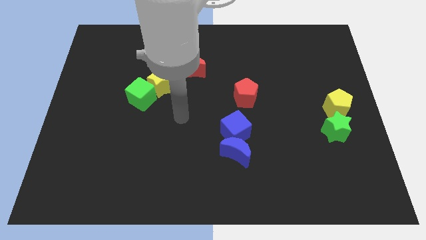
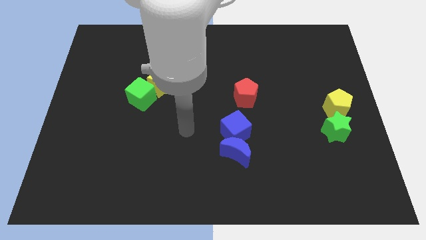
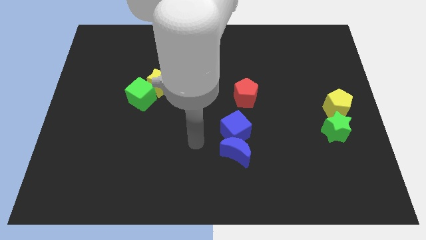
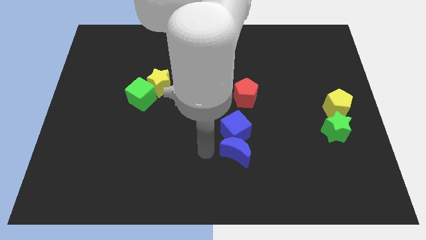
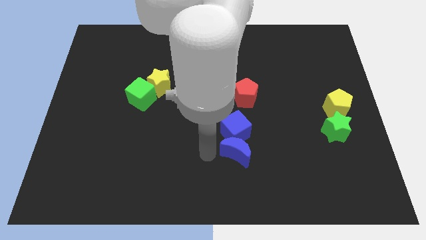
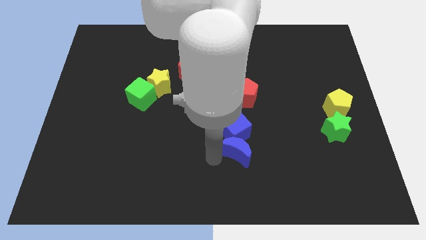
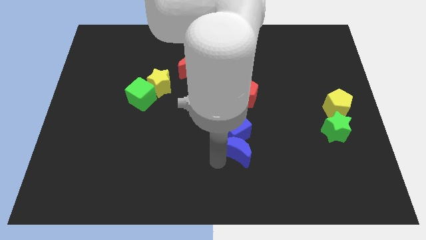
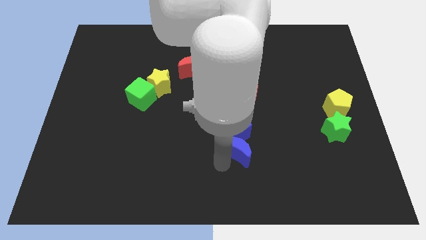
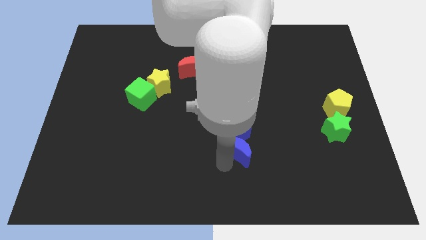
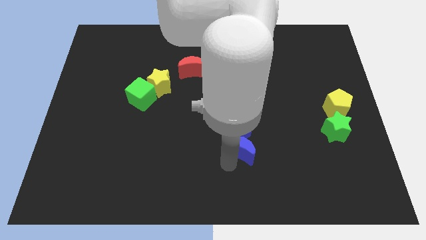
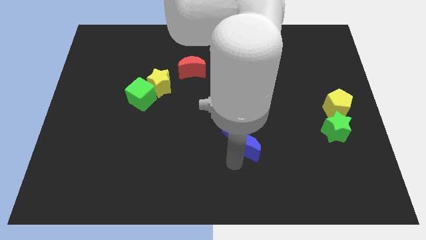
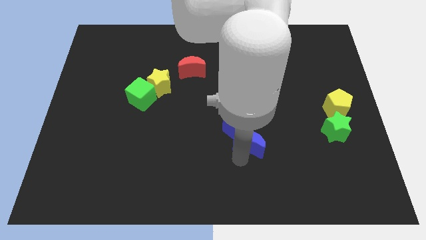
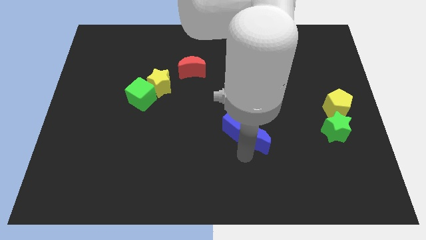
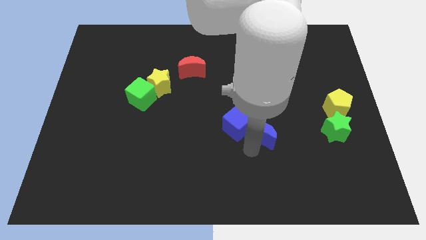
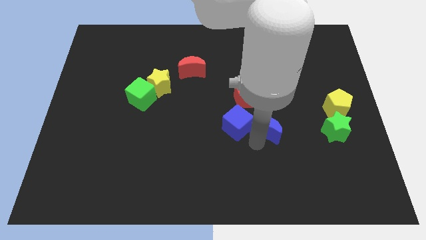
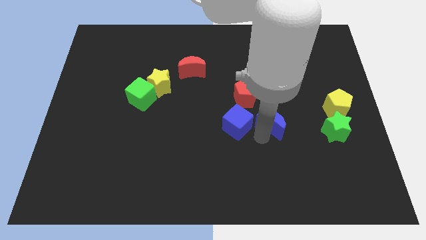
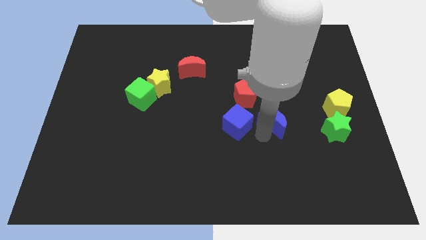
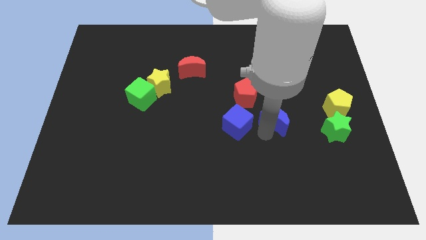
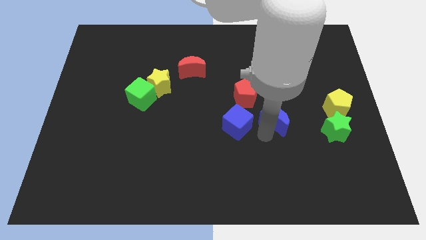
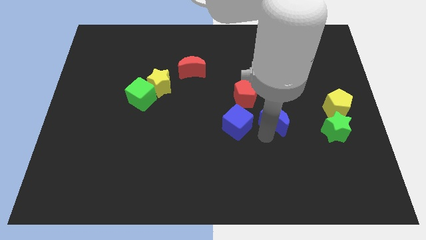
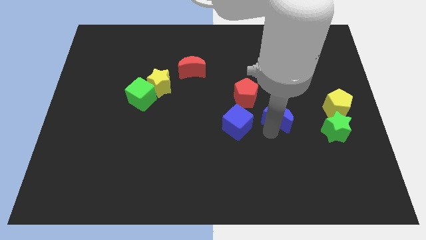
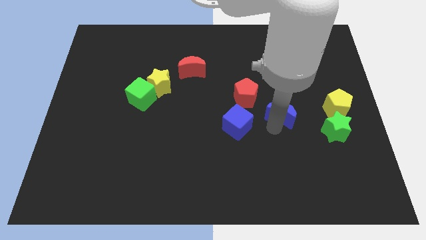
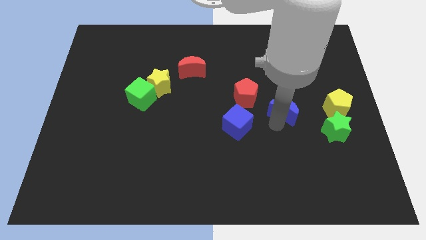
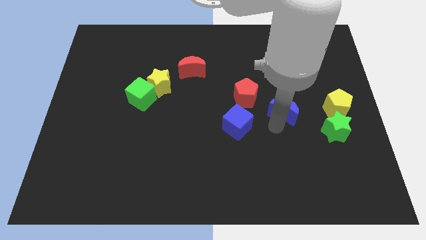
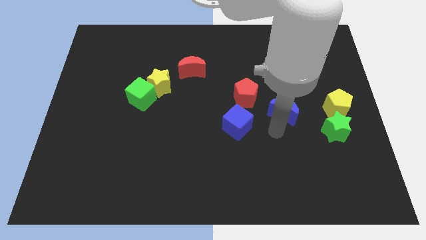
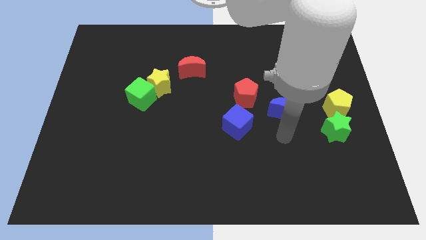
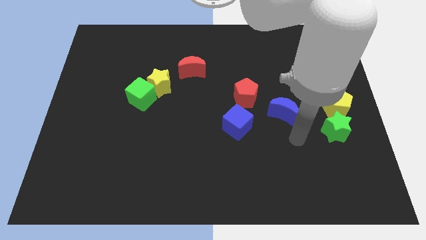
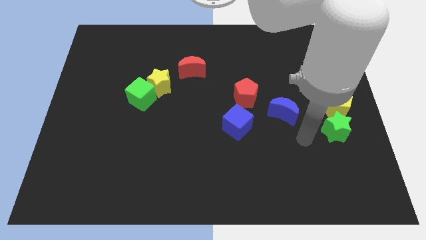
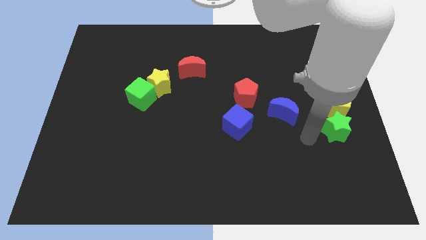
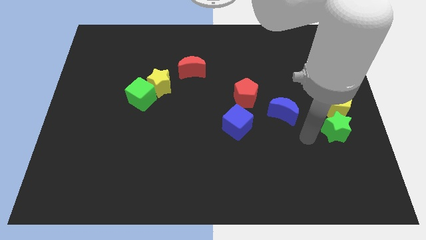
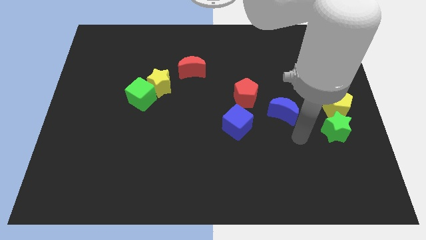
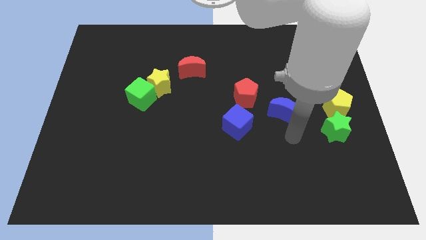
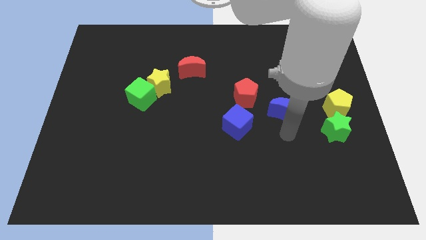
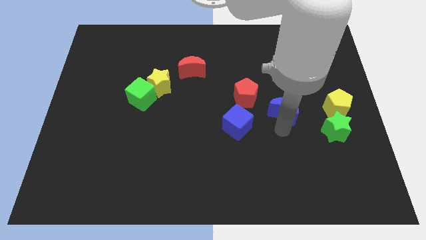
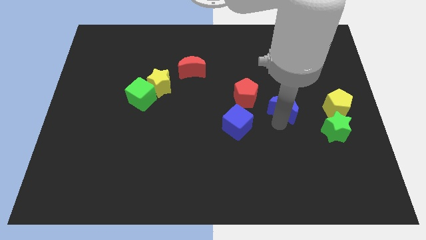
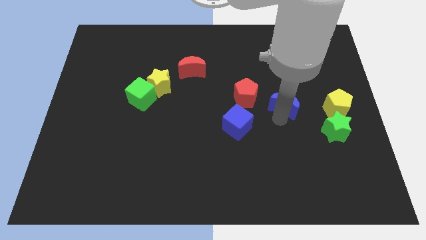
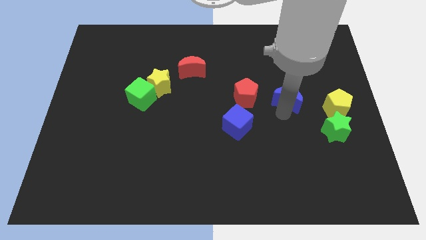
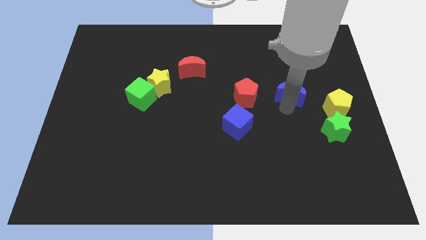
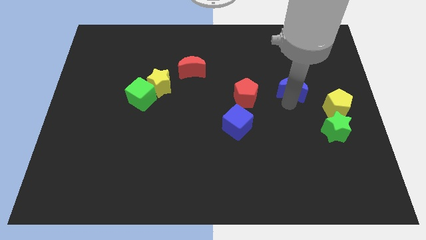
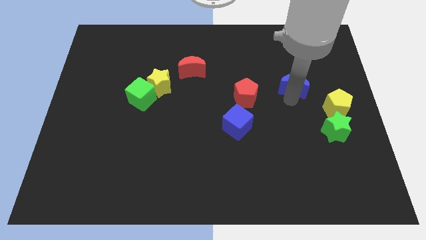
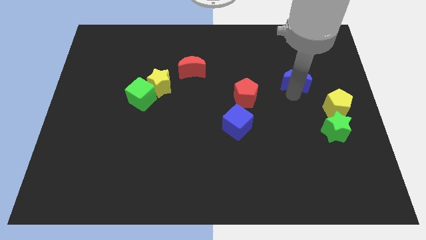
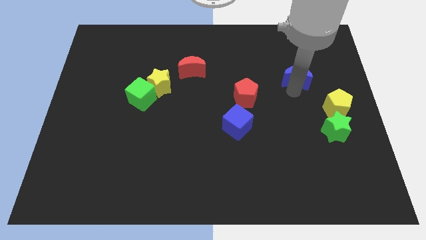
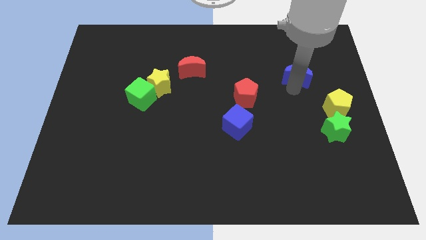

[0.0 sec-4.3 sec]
place blue moon diagonally above red pentagon and yellow pentagon

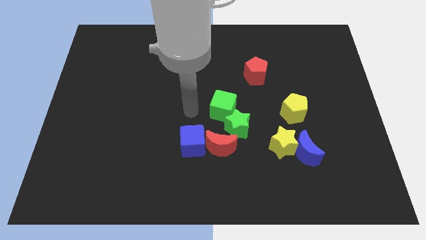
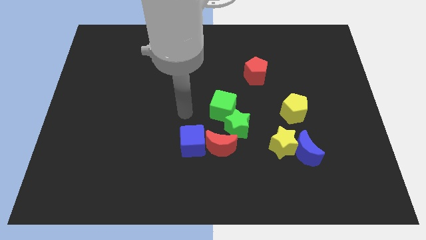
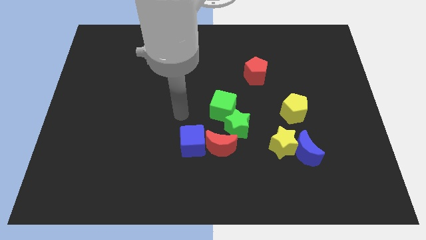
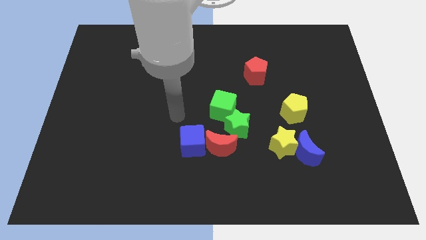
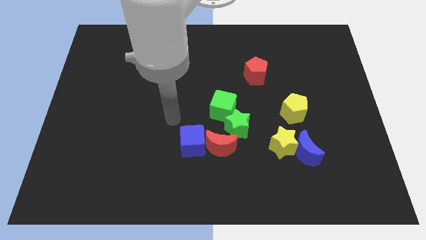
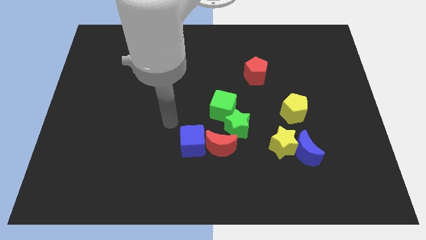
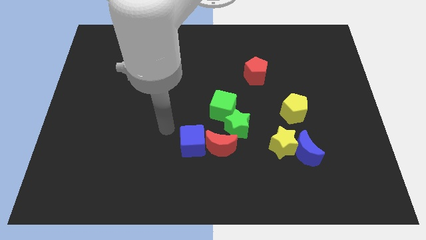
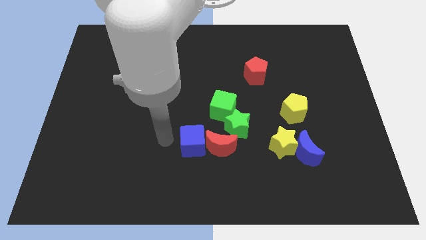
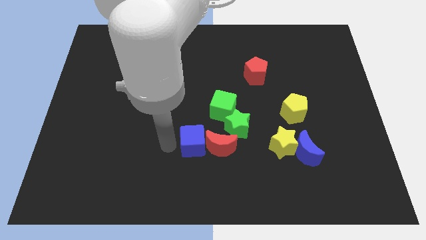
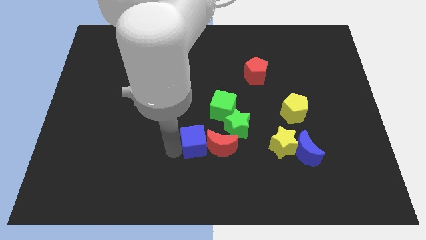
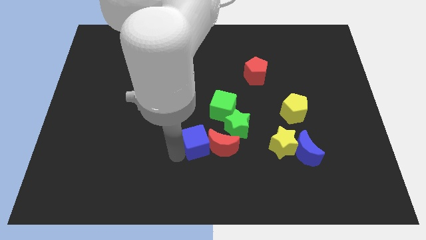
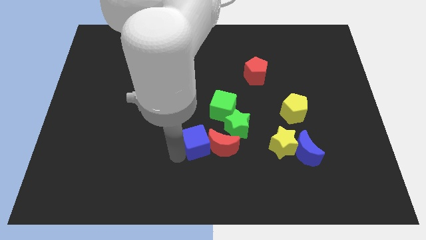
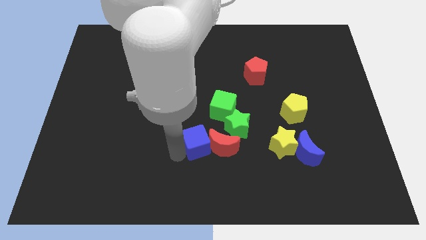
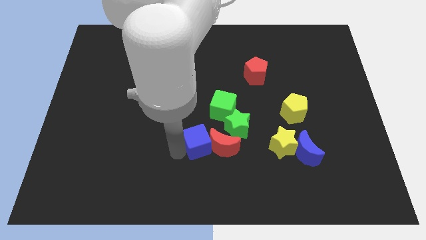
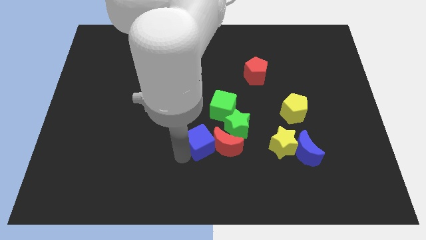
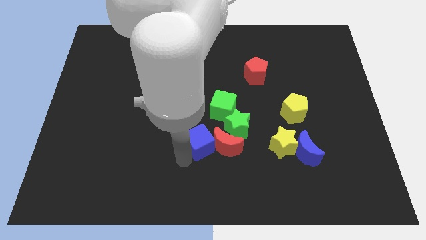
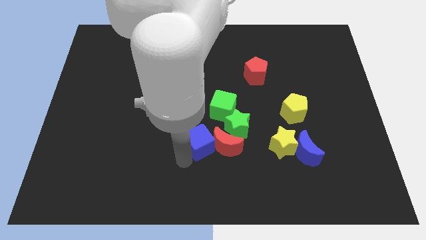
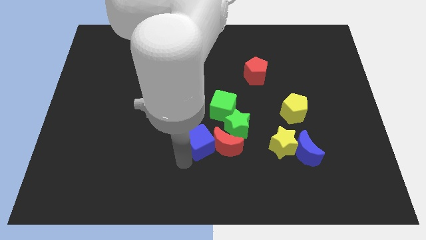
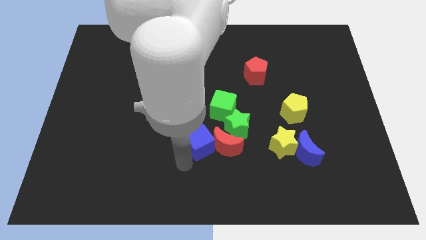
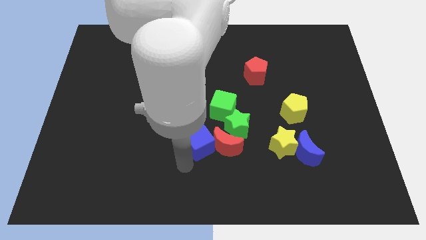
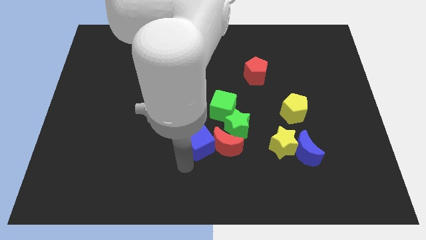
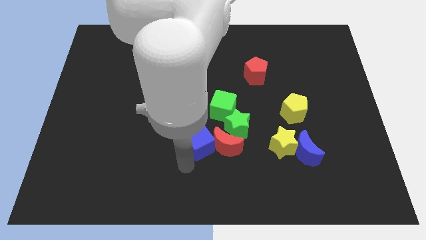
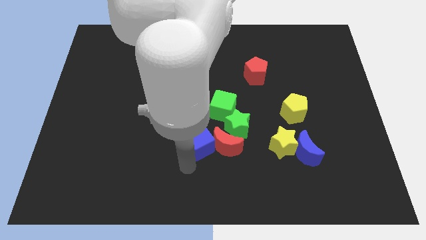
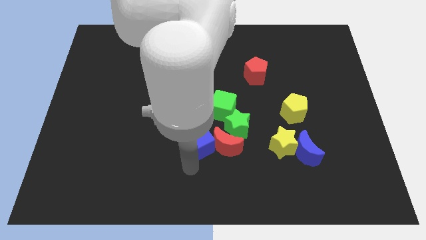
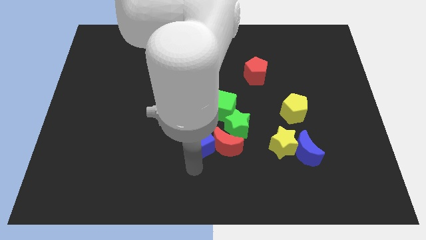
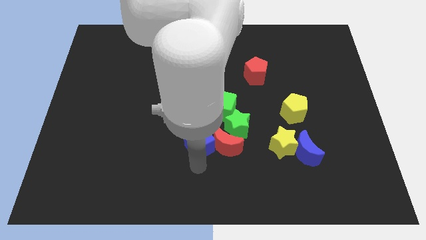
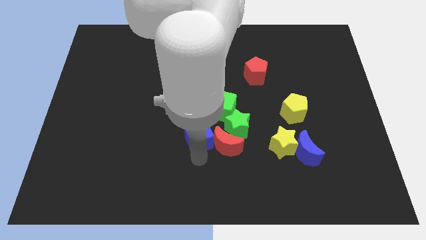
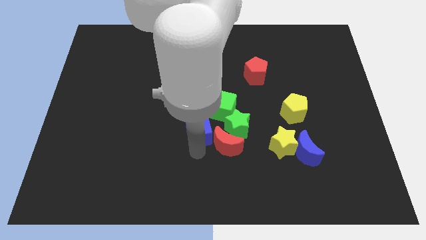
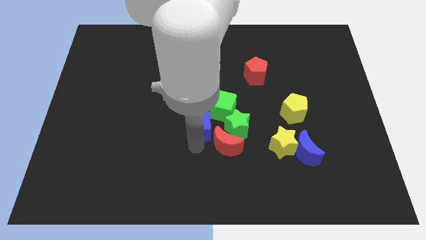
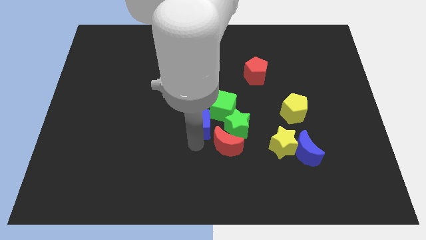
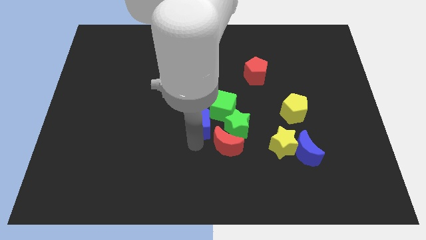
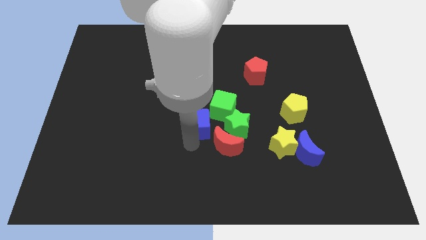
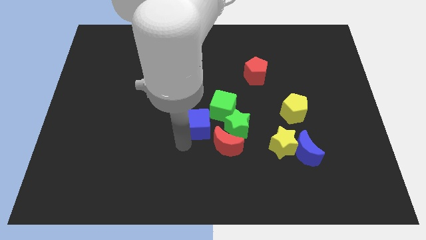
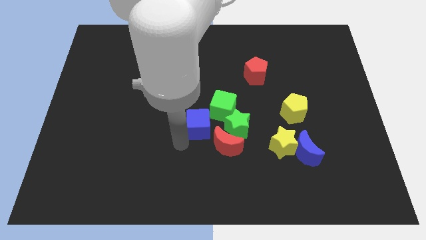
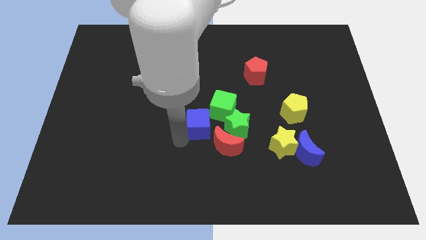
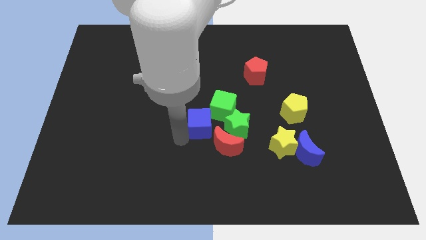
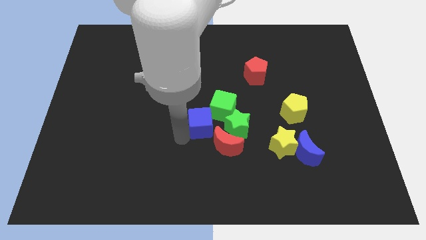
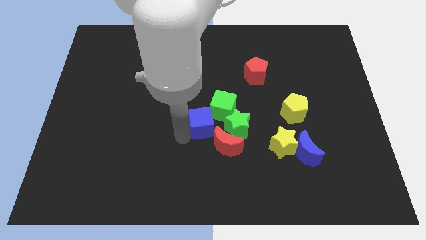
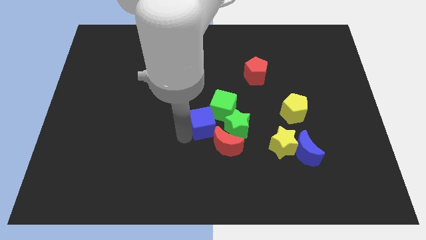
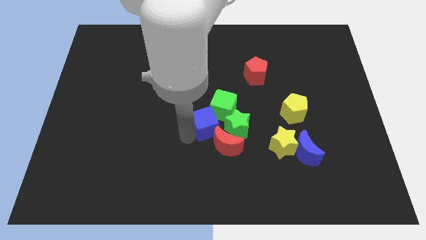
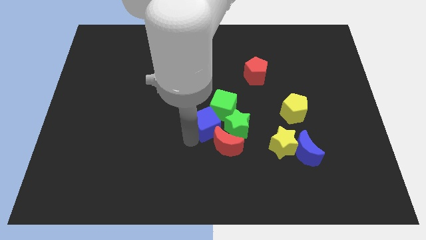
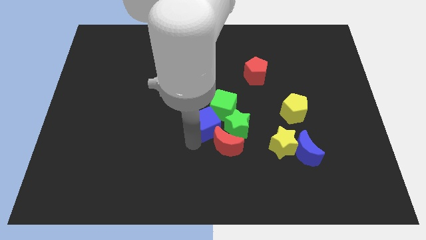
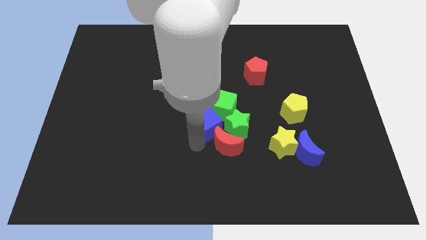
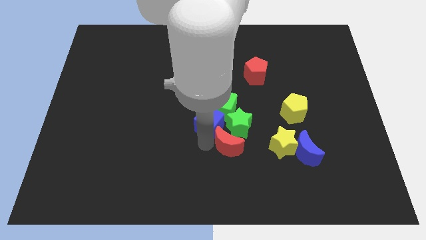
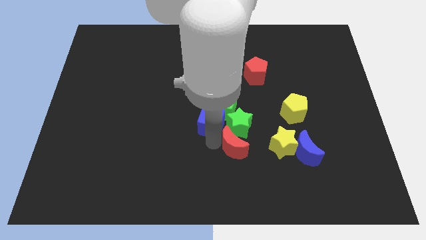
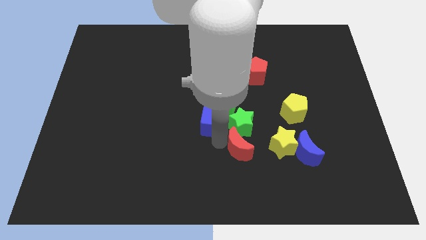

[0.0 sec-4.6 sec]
put blue cube at the left side of the green star
